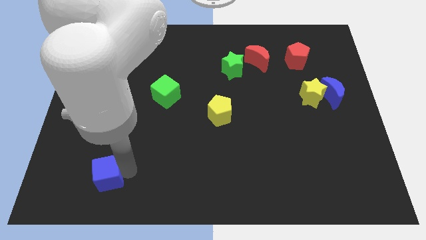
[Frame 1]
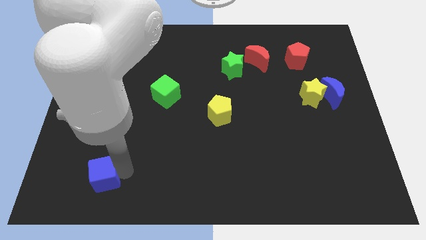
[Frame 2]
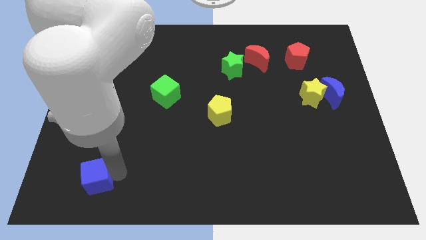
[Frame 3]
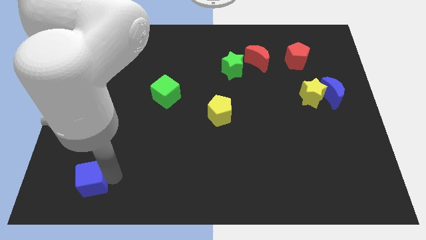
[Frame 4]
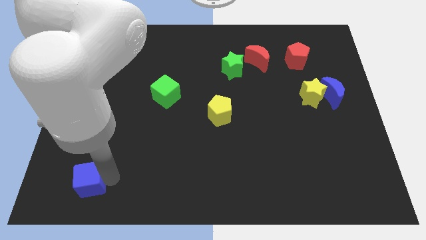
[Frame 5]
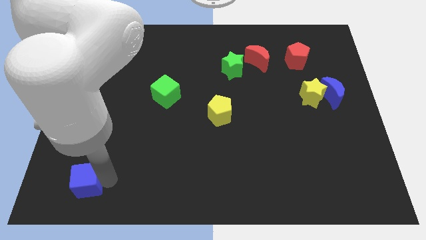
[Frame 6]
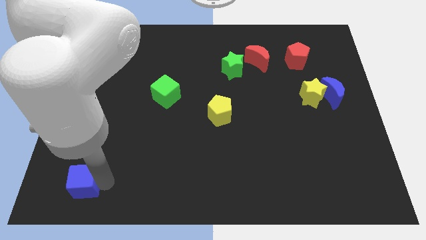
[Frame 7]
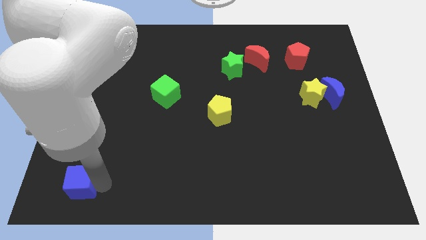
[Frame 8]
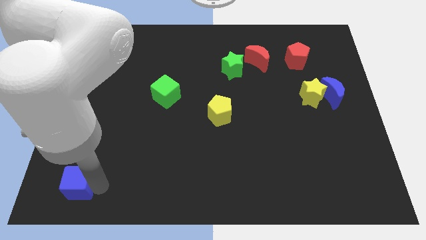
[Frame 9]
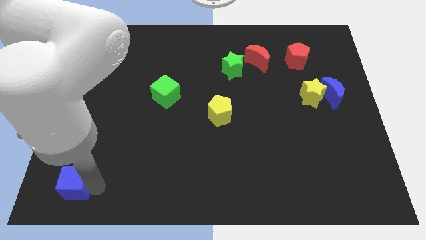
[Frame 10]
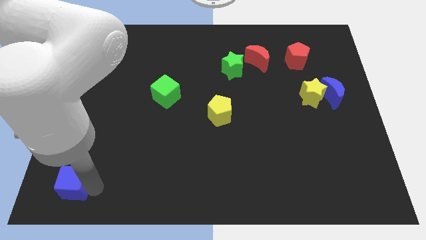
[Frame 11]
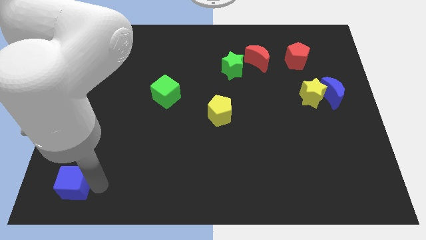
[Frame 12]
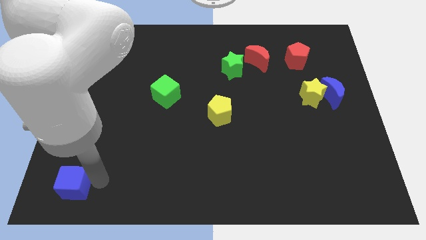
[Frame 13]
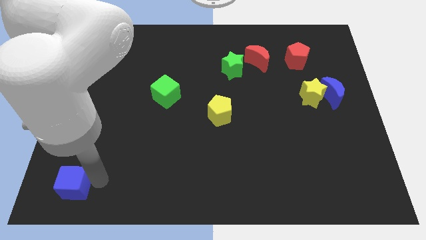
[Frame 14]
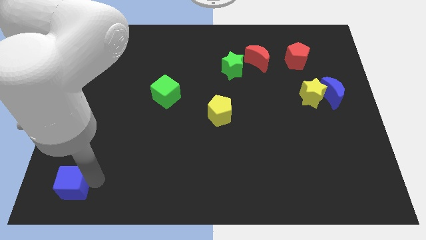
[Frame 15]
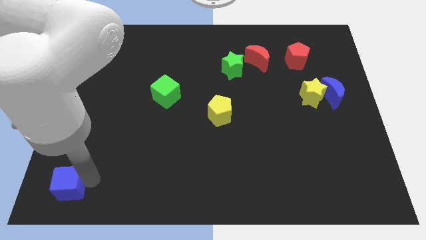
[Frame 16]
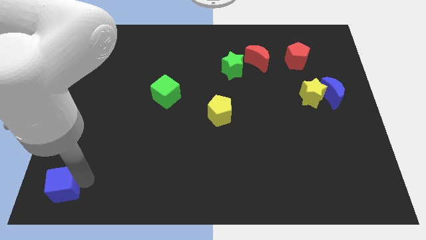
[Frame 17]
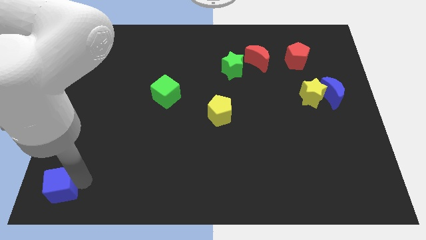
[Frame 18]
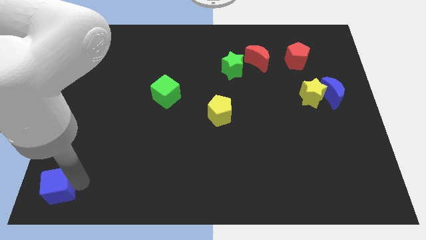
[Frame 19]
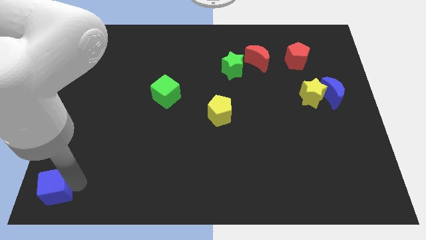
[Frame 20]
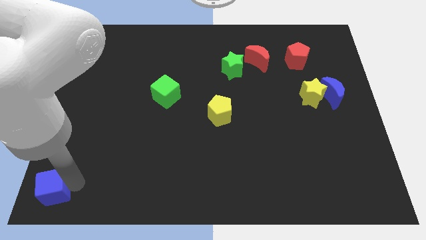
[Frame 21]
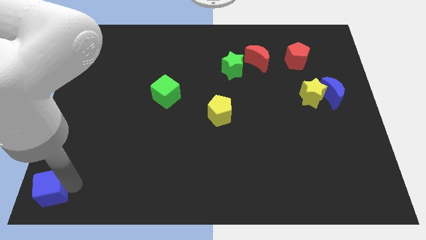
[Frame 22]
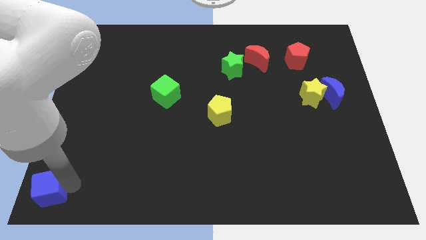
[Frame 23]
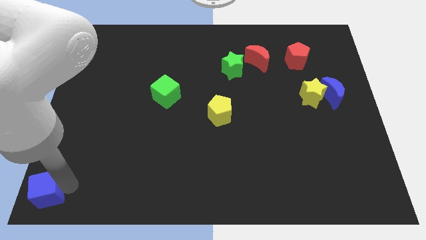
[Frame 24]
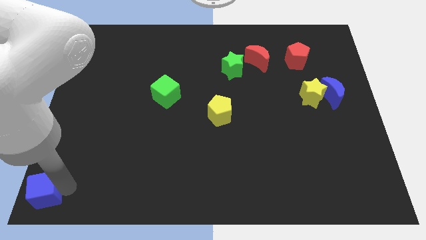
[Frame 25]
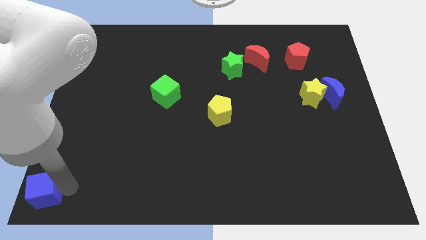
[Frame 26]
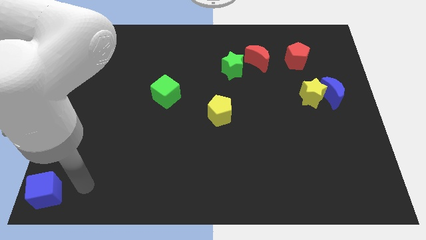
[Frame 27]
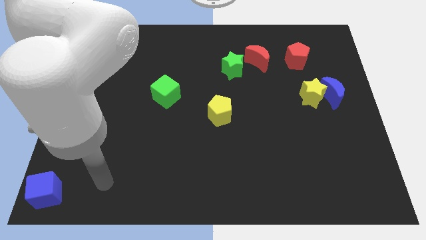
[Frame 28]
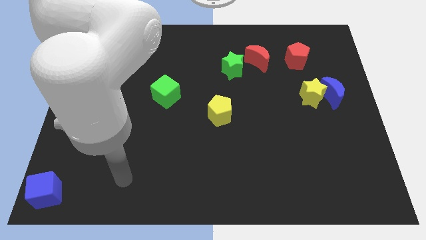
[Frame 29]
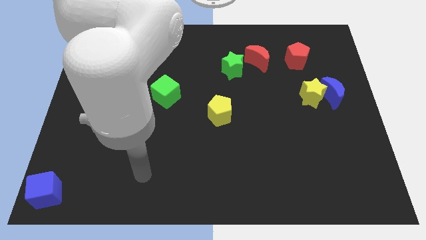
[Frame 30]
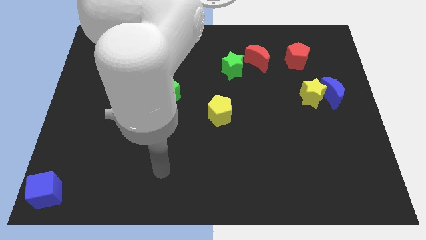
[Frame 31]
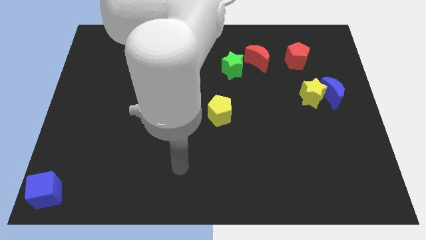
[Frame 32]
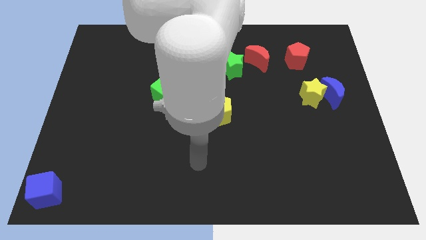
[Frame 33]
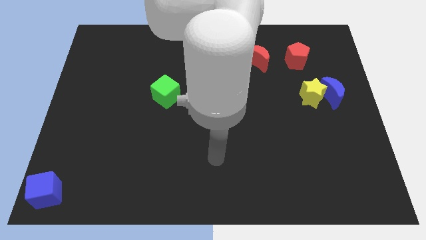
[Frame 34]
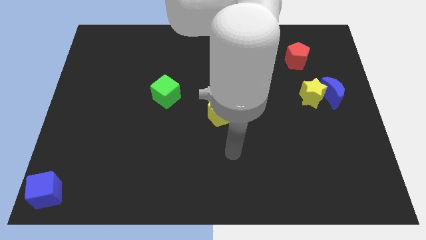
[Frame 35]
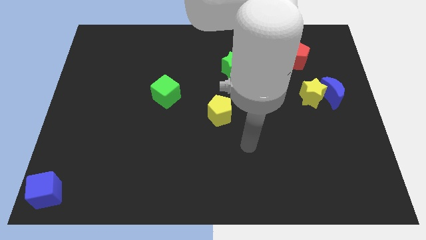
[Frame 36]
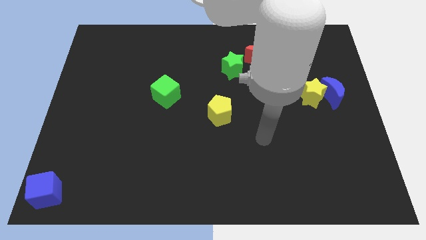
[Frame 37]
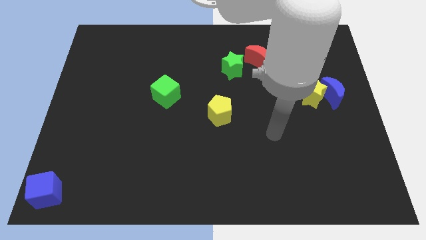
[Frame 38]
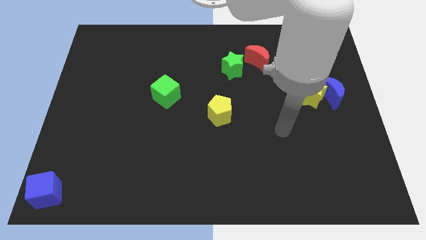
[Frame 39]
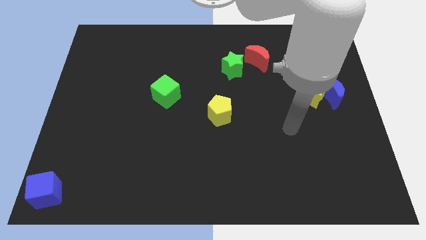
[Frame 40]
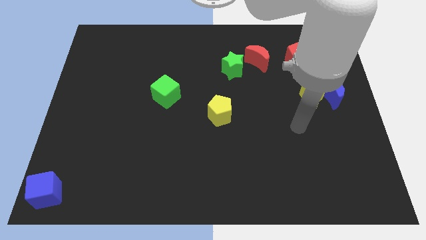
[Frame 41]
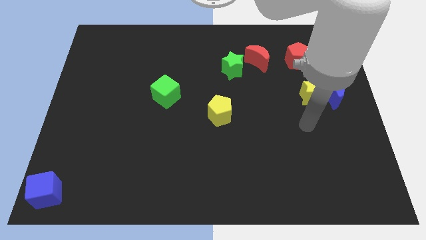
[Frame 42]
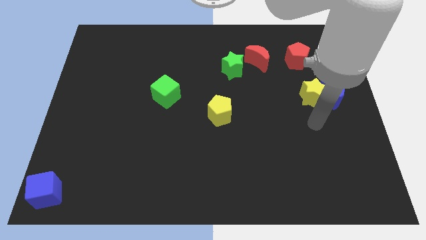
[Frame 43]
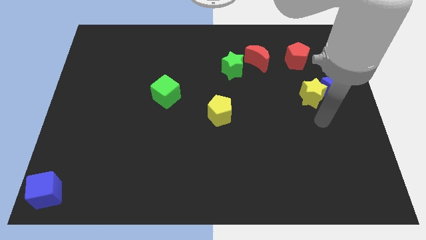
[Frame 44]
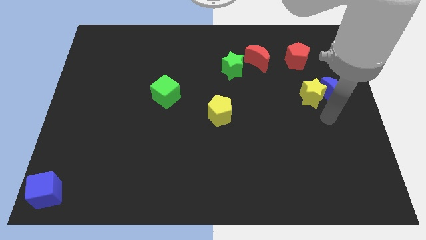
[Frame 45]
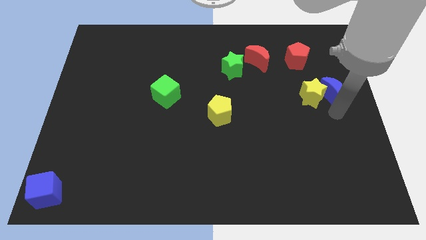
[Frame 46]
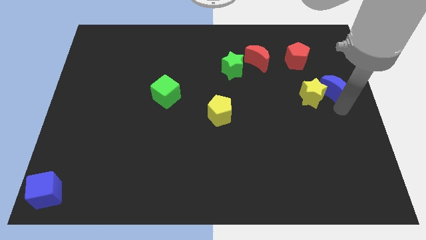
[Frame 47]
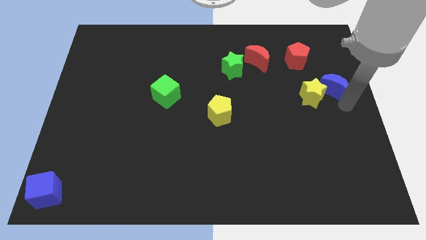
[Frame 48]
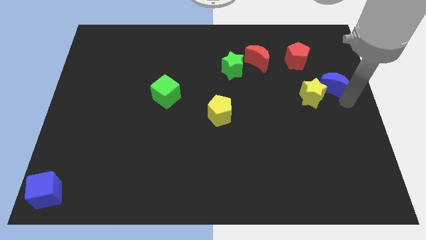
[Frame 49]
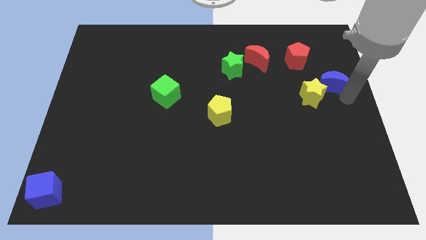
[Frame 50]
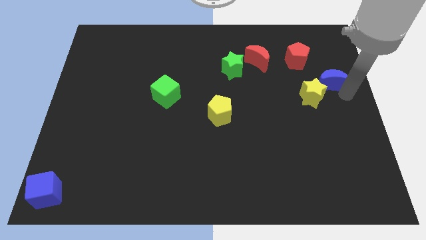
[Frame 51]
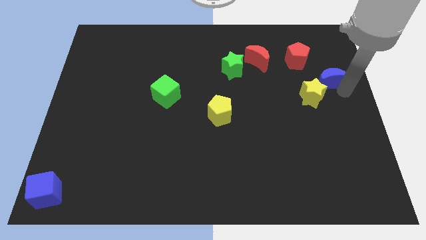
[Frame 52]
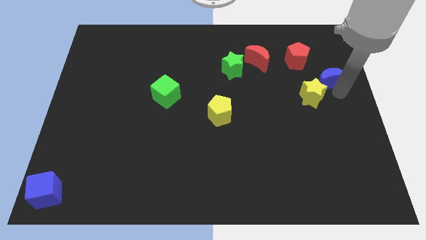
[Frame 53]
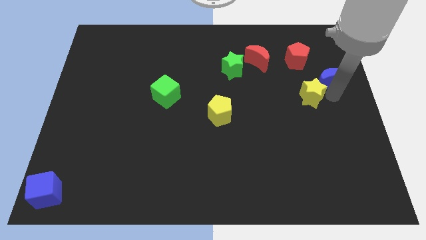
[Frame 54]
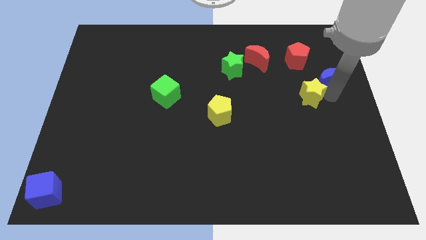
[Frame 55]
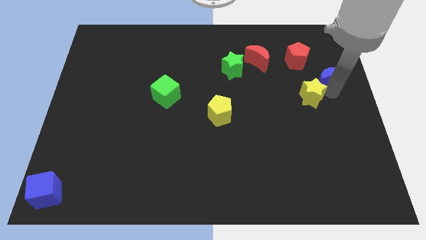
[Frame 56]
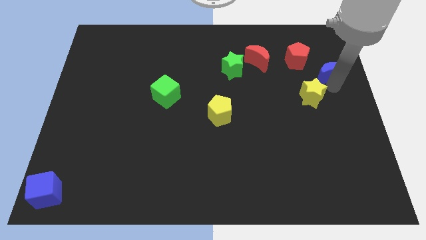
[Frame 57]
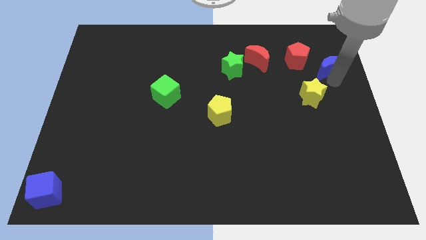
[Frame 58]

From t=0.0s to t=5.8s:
separate the blue crescent from the yellow star

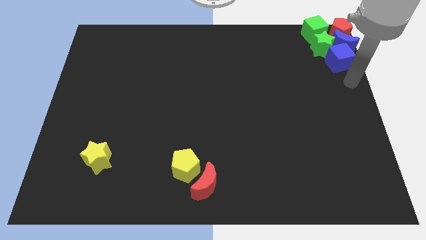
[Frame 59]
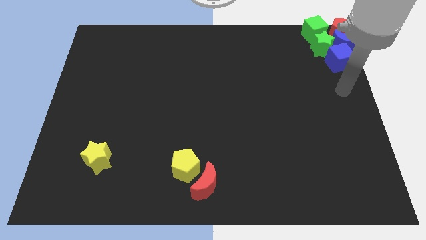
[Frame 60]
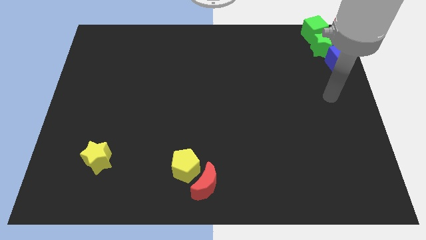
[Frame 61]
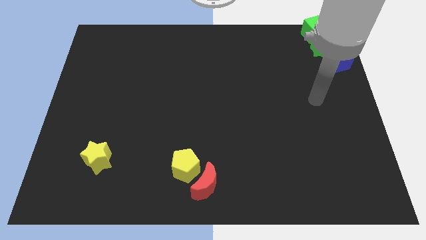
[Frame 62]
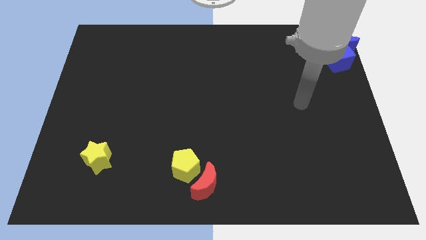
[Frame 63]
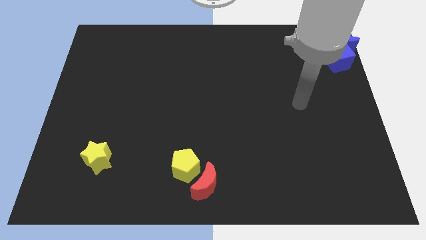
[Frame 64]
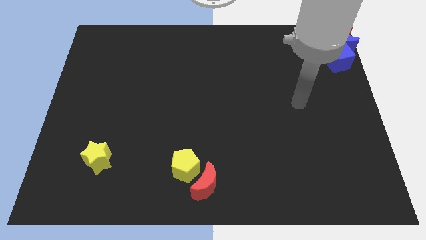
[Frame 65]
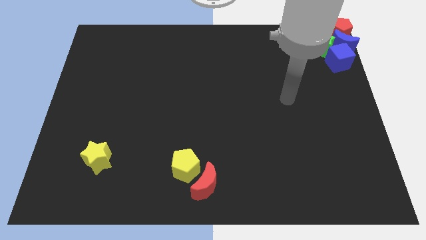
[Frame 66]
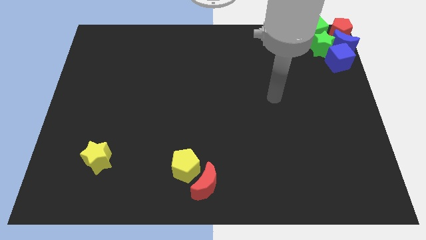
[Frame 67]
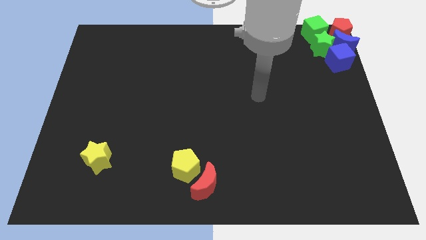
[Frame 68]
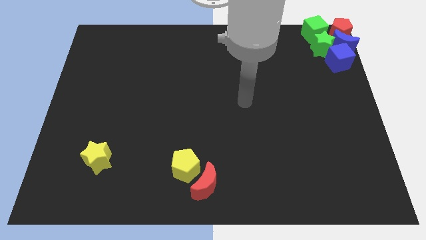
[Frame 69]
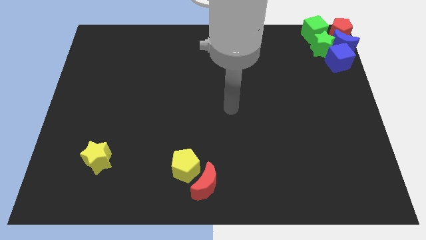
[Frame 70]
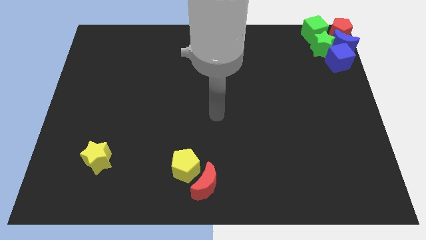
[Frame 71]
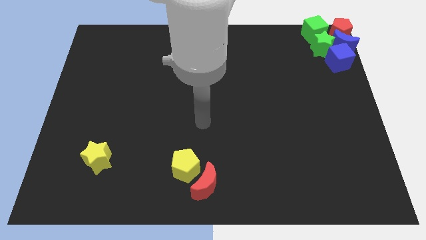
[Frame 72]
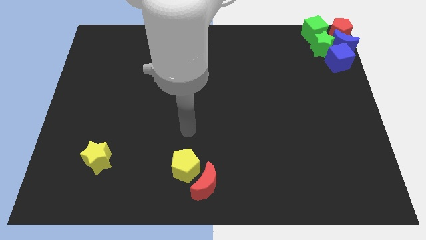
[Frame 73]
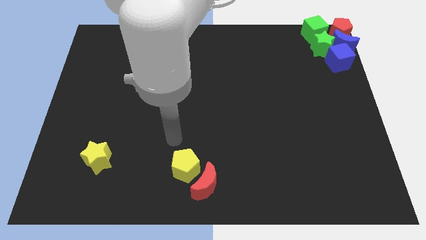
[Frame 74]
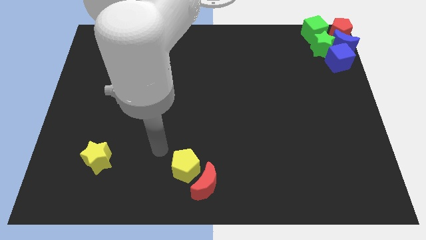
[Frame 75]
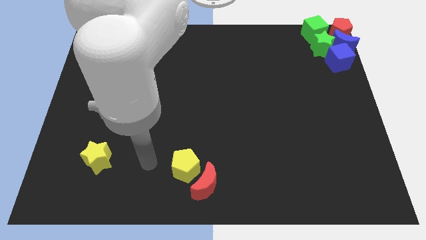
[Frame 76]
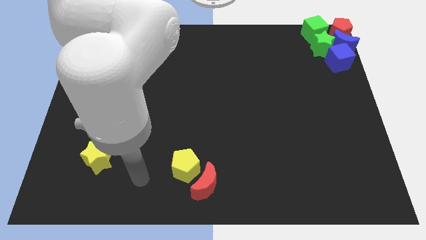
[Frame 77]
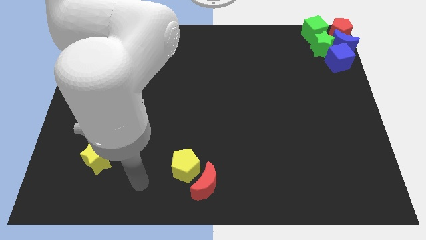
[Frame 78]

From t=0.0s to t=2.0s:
move your arm away from the blue cube

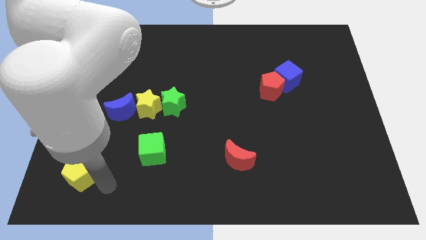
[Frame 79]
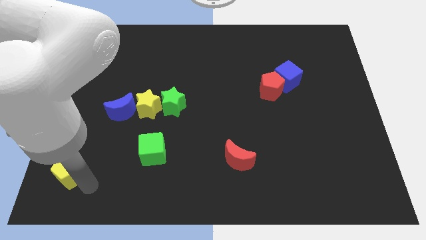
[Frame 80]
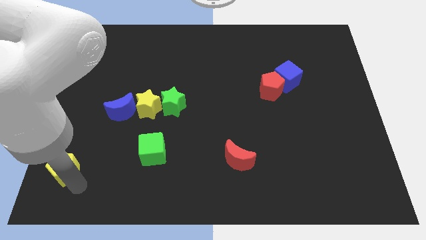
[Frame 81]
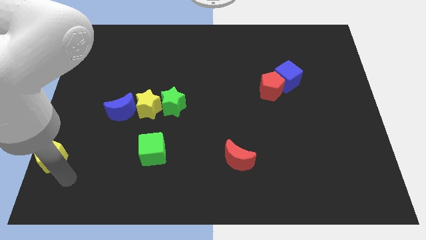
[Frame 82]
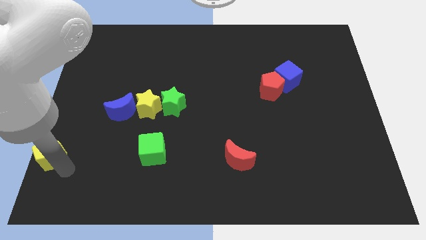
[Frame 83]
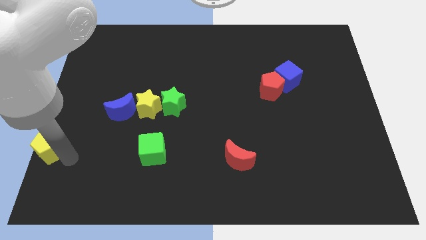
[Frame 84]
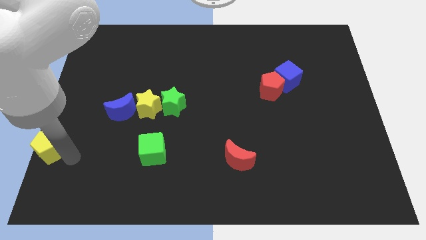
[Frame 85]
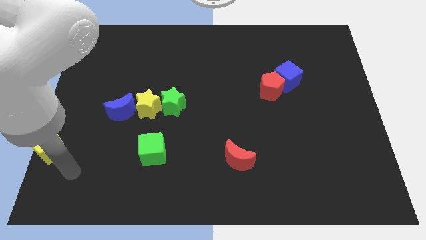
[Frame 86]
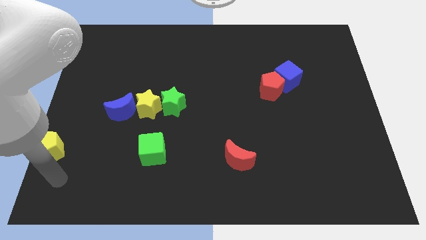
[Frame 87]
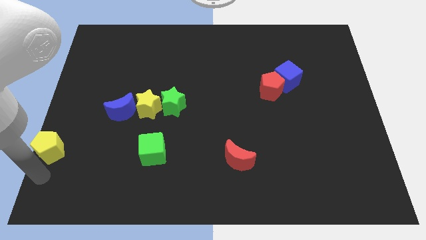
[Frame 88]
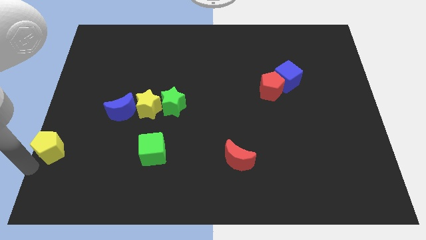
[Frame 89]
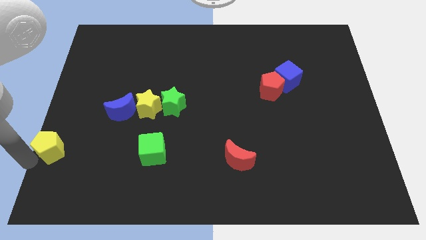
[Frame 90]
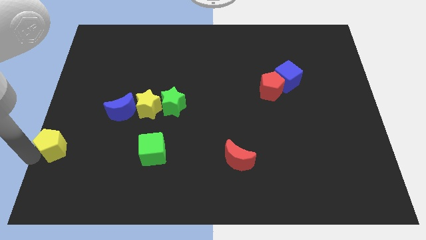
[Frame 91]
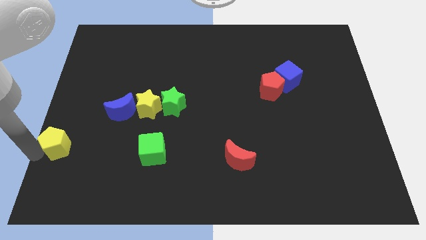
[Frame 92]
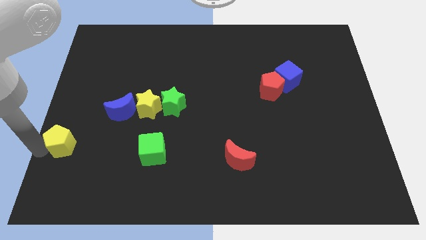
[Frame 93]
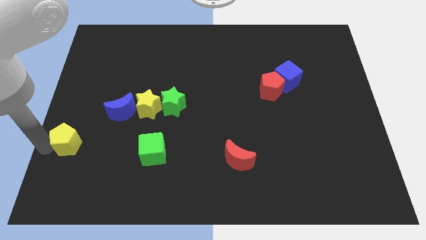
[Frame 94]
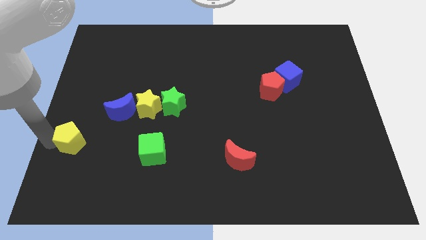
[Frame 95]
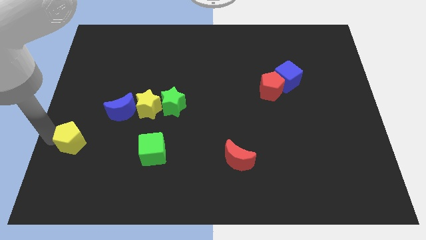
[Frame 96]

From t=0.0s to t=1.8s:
place the yellow pentagon diagonally bottom left to the blue moon
